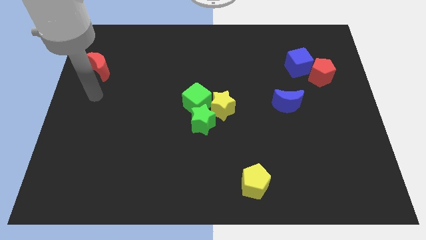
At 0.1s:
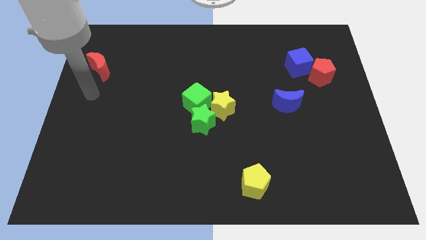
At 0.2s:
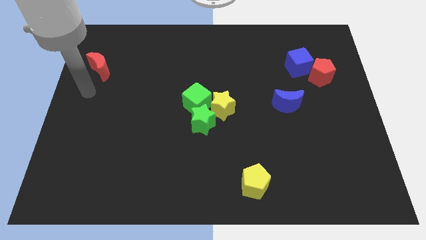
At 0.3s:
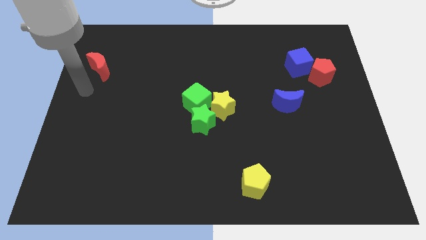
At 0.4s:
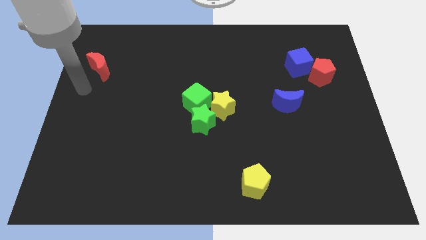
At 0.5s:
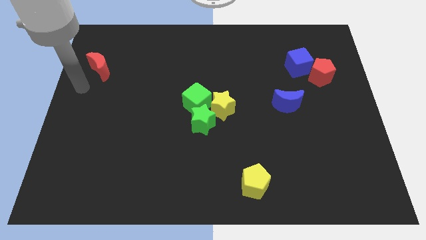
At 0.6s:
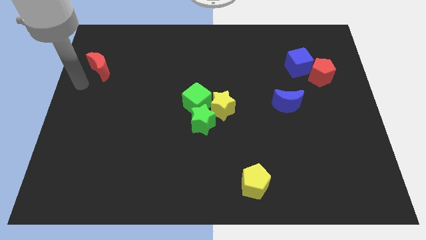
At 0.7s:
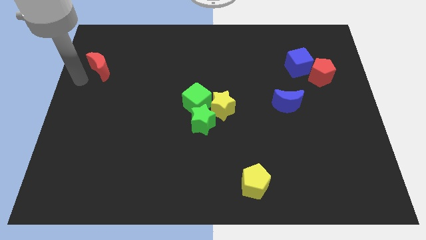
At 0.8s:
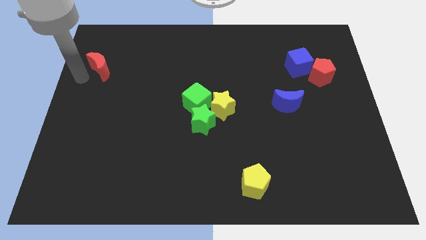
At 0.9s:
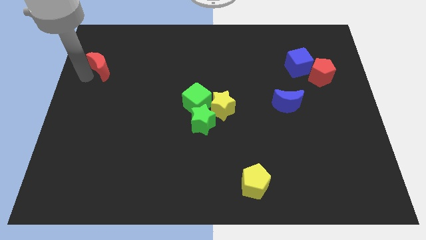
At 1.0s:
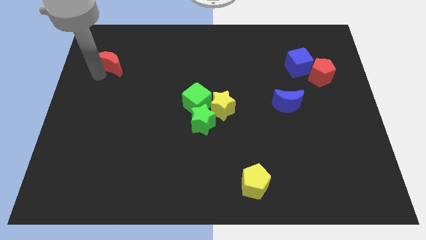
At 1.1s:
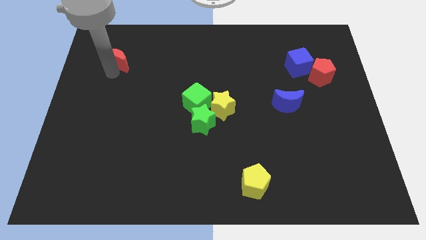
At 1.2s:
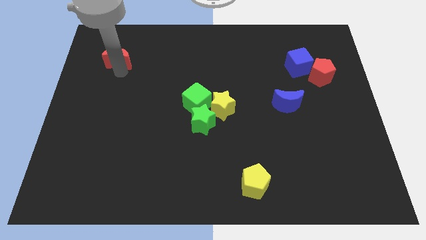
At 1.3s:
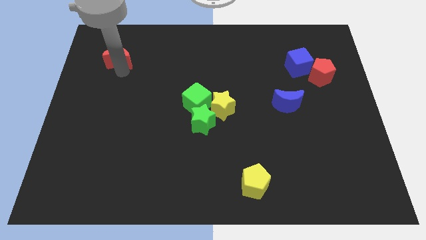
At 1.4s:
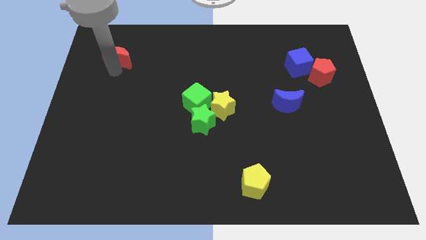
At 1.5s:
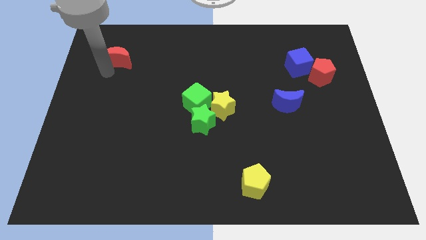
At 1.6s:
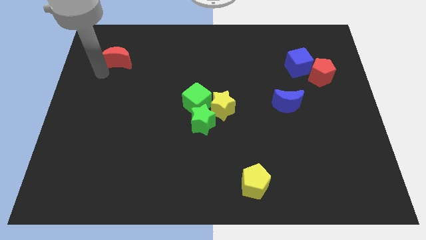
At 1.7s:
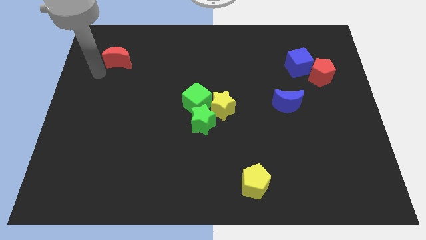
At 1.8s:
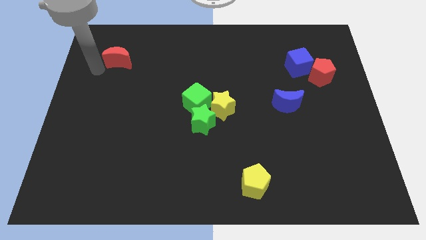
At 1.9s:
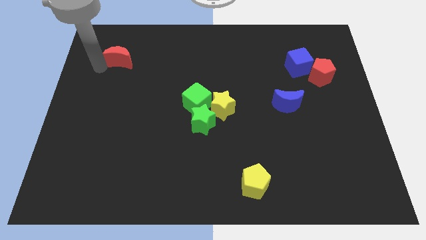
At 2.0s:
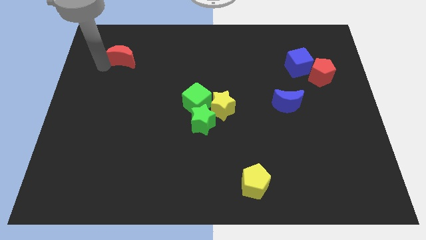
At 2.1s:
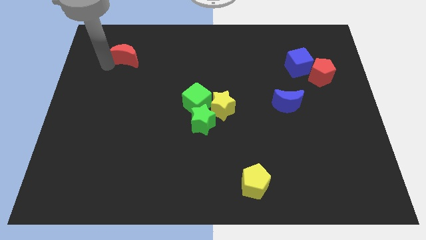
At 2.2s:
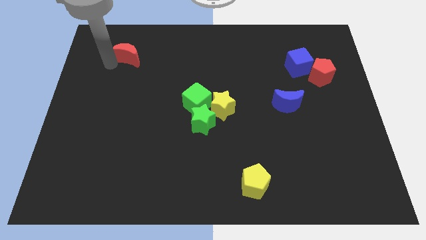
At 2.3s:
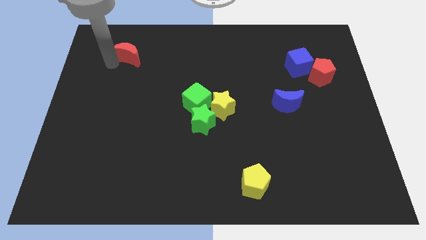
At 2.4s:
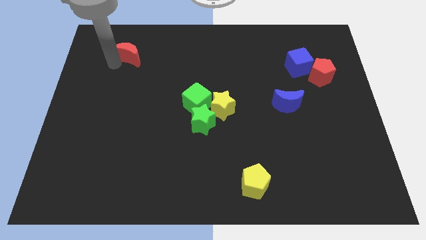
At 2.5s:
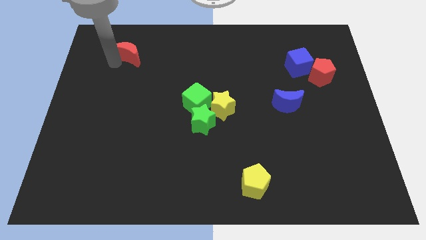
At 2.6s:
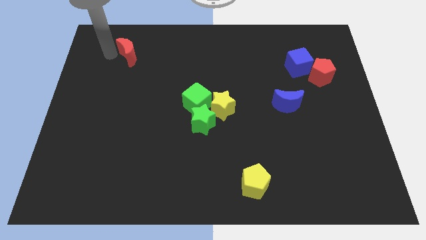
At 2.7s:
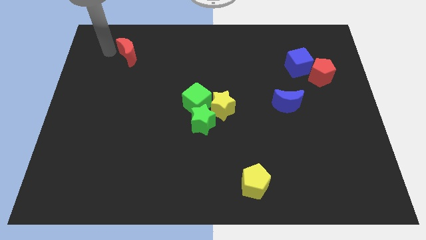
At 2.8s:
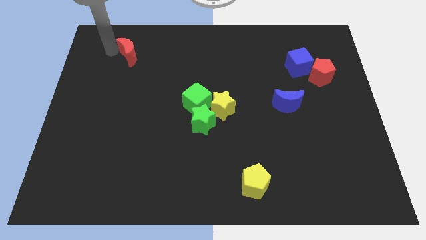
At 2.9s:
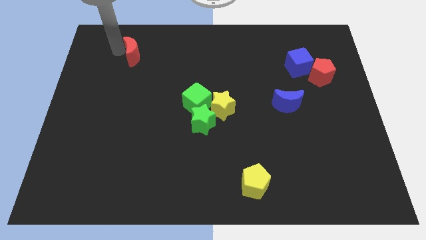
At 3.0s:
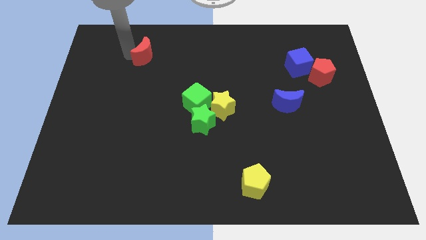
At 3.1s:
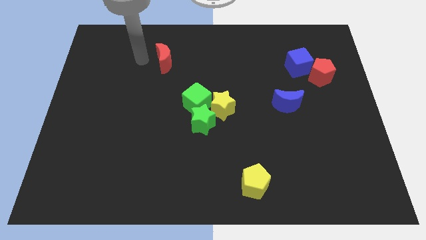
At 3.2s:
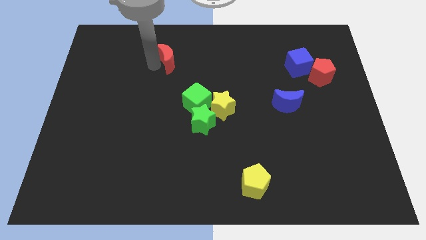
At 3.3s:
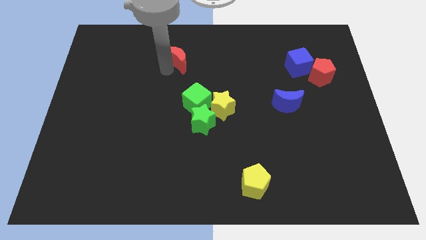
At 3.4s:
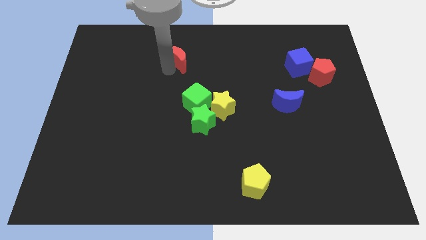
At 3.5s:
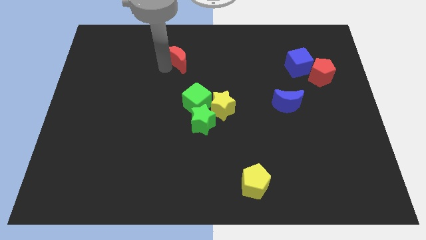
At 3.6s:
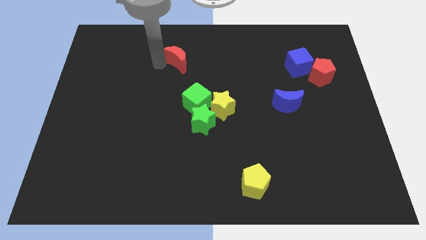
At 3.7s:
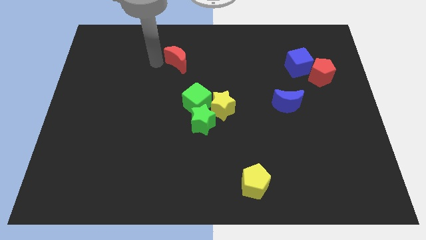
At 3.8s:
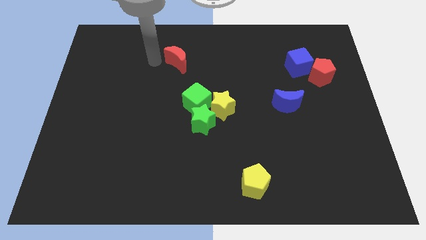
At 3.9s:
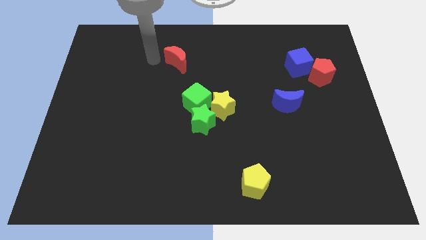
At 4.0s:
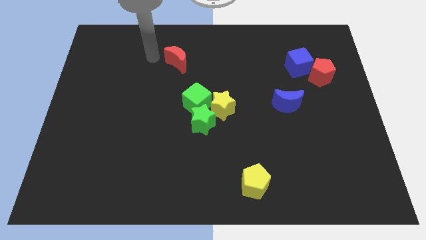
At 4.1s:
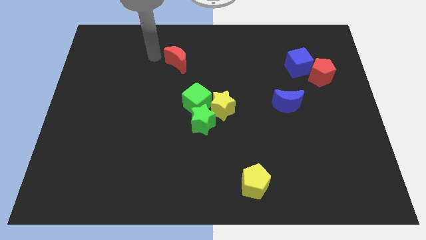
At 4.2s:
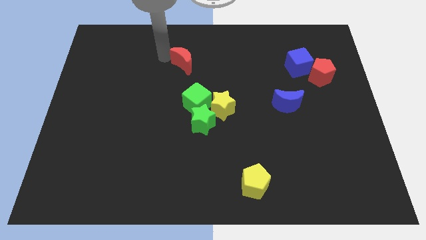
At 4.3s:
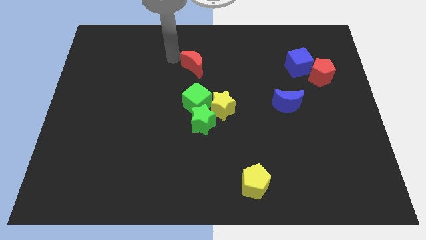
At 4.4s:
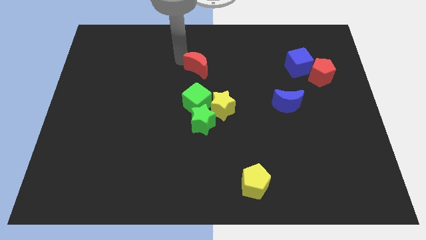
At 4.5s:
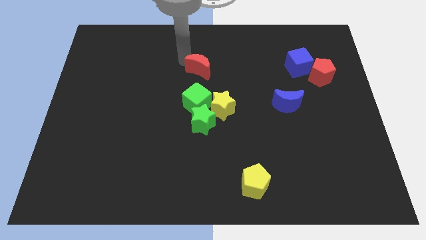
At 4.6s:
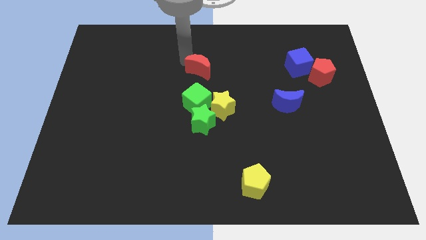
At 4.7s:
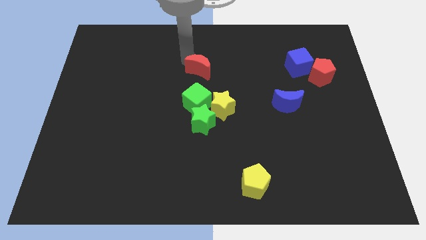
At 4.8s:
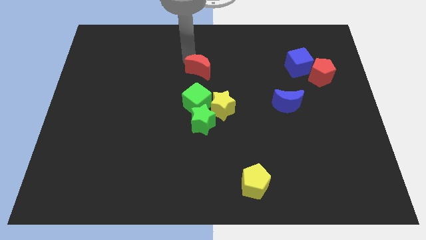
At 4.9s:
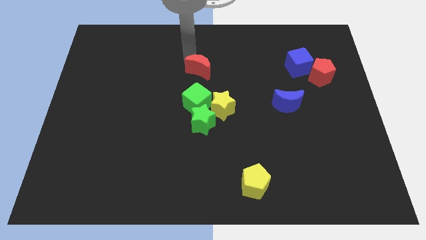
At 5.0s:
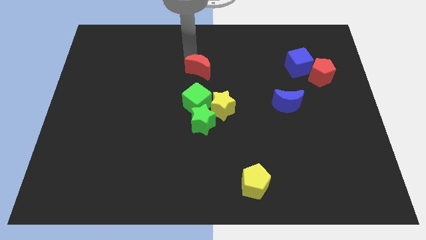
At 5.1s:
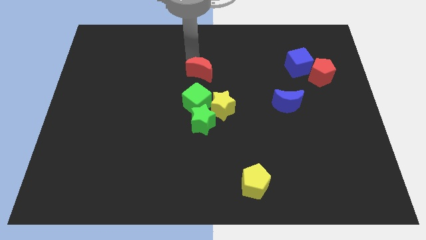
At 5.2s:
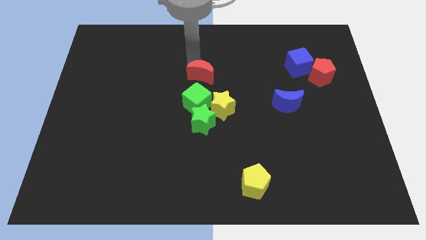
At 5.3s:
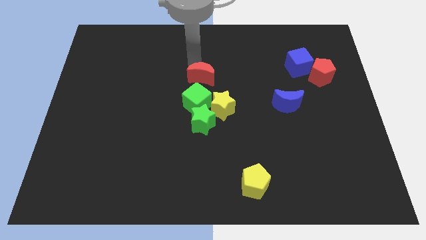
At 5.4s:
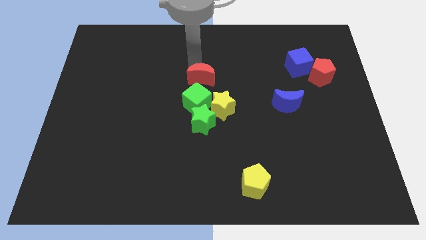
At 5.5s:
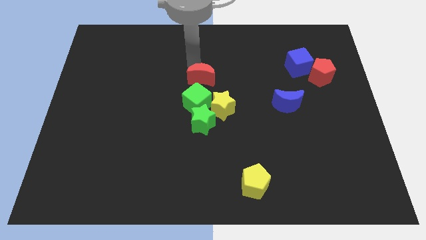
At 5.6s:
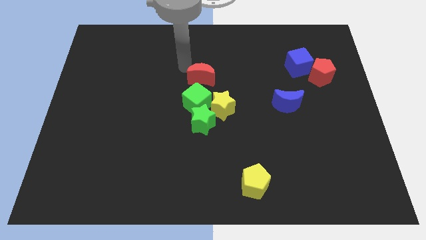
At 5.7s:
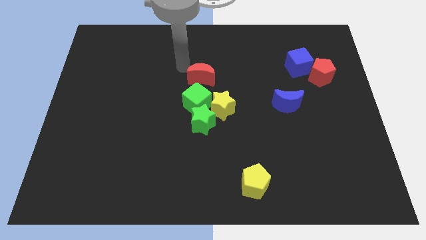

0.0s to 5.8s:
place the red crescent above the green cube

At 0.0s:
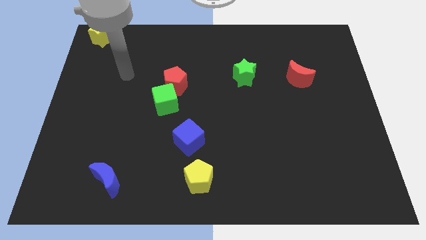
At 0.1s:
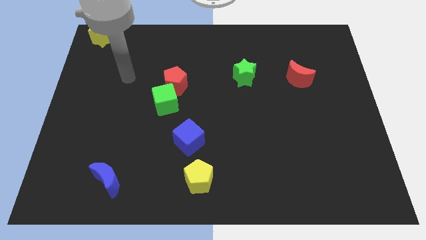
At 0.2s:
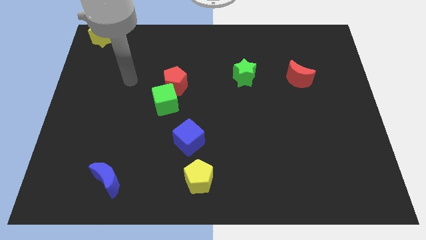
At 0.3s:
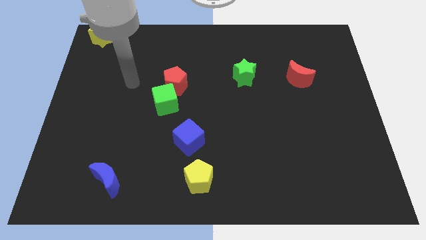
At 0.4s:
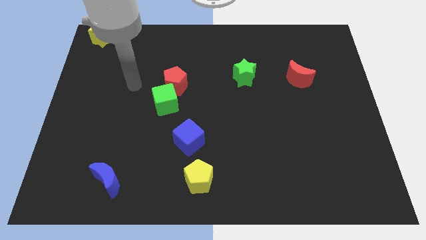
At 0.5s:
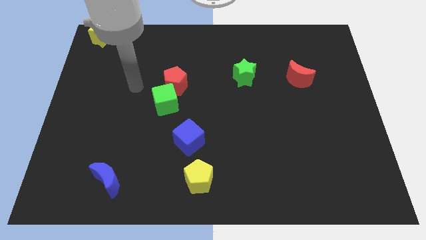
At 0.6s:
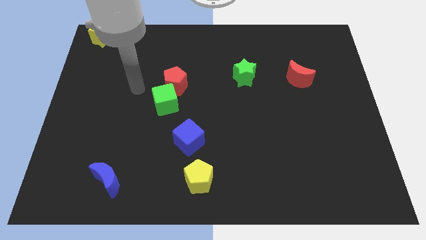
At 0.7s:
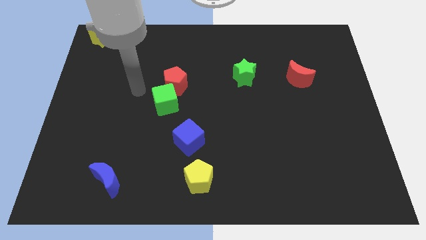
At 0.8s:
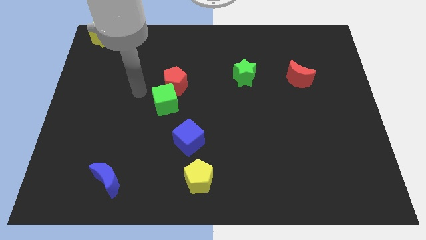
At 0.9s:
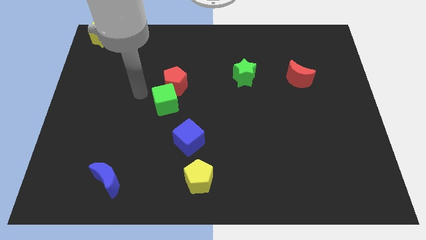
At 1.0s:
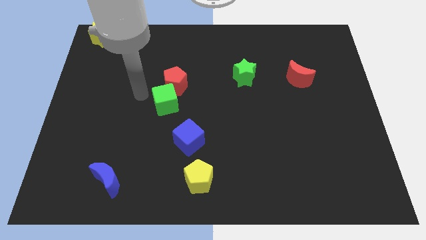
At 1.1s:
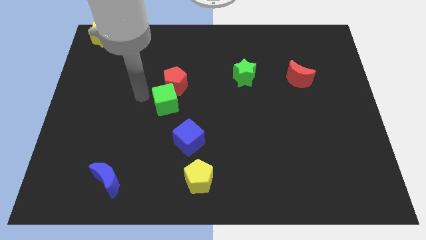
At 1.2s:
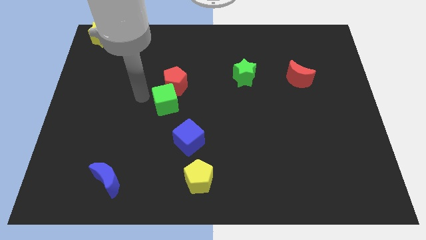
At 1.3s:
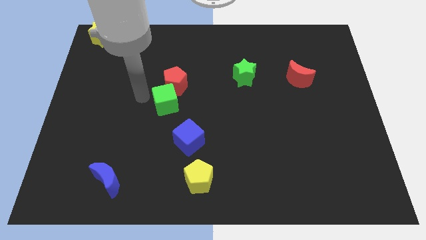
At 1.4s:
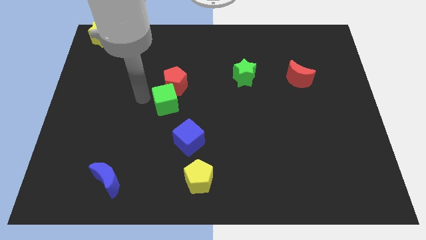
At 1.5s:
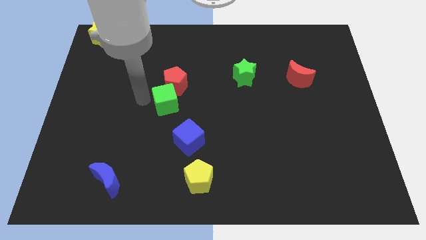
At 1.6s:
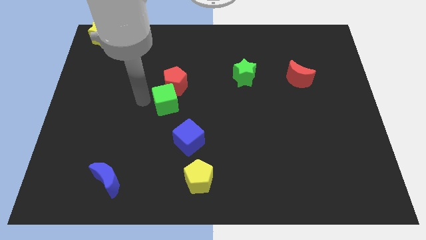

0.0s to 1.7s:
place your arm to the left of green cube

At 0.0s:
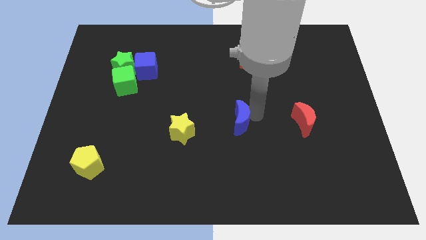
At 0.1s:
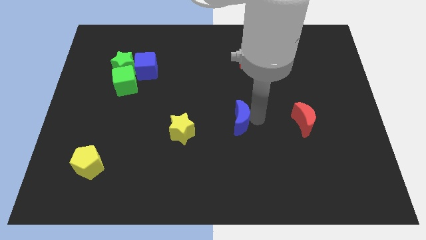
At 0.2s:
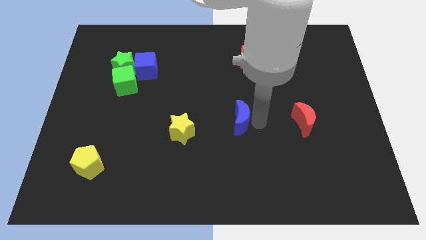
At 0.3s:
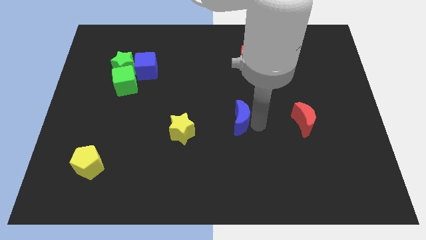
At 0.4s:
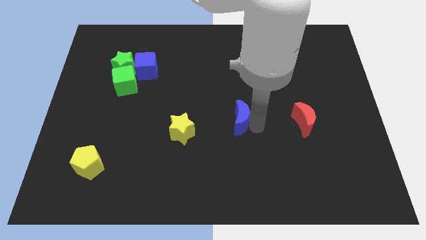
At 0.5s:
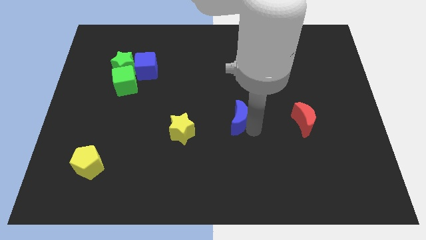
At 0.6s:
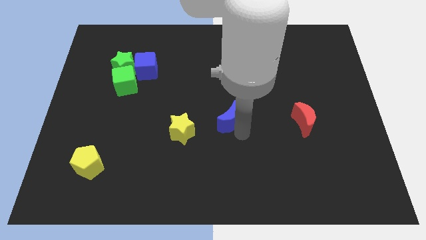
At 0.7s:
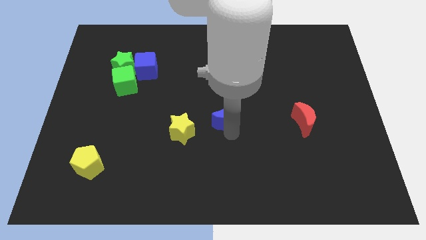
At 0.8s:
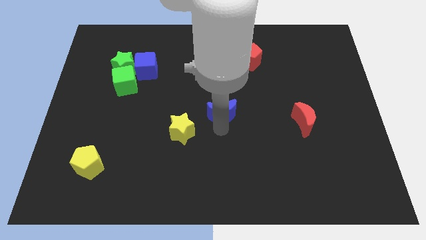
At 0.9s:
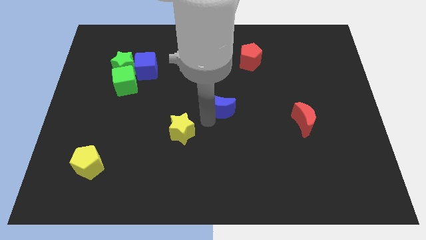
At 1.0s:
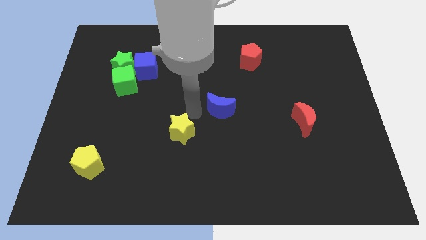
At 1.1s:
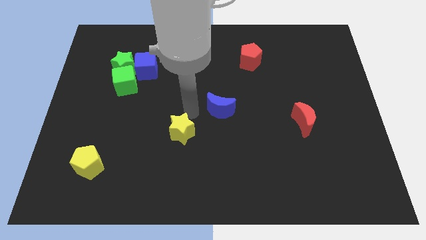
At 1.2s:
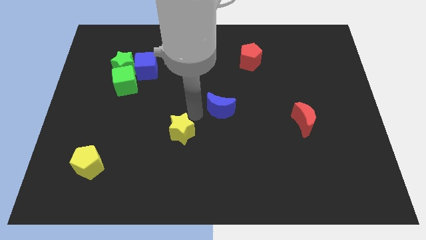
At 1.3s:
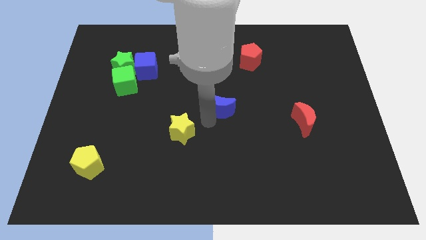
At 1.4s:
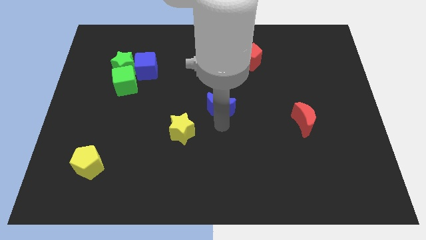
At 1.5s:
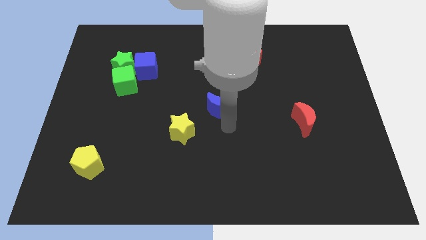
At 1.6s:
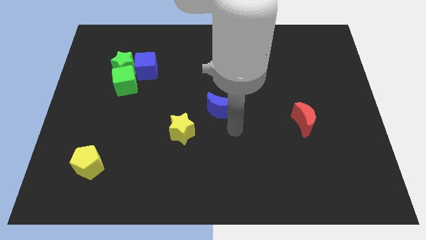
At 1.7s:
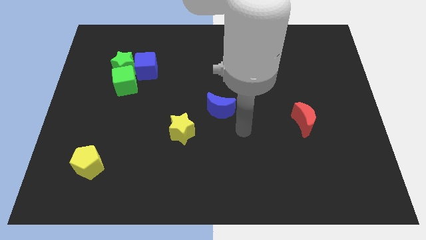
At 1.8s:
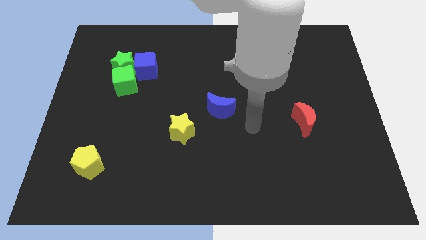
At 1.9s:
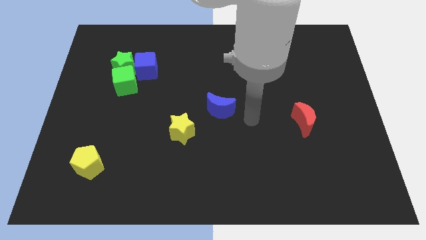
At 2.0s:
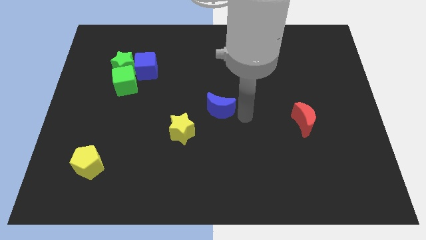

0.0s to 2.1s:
place the blue moon diagonal to the red pentagon
